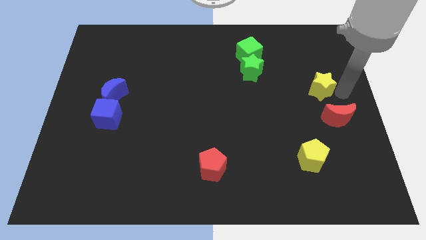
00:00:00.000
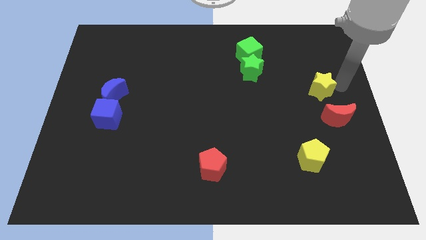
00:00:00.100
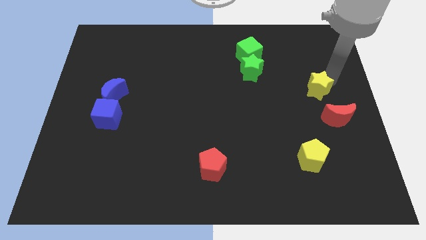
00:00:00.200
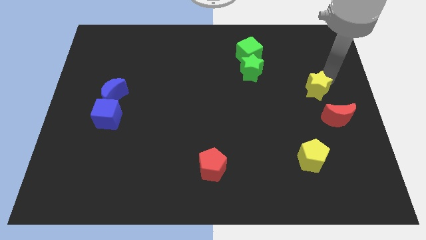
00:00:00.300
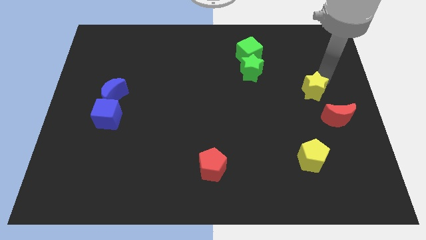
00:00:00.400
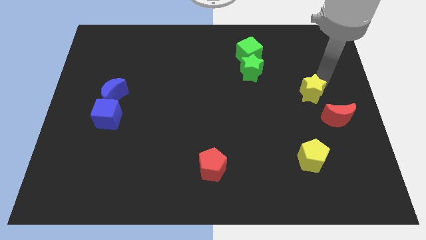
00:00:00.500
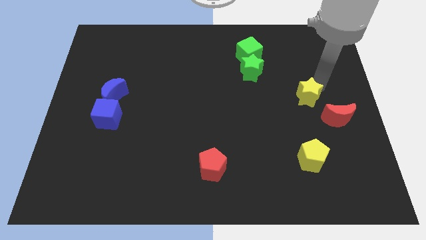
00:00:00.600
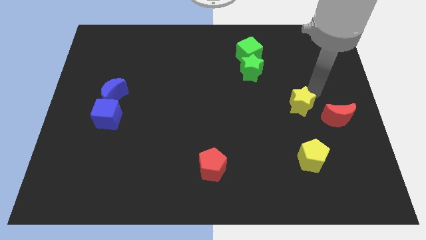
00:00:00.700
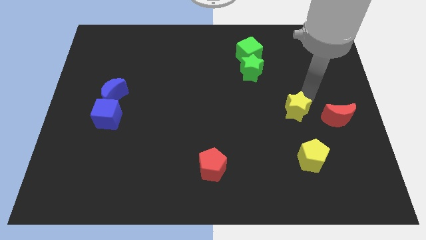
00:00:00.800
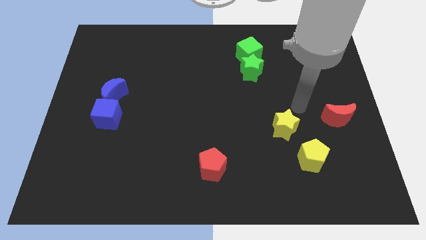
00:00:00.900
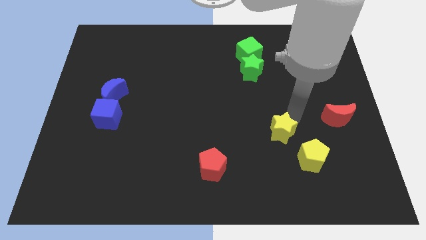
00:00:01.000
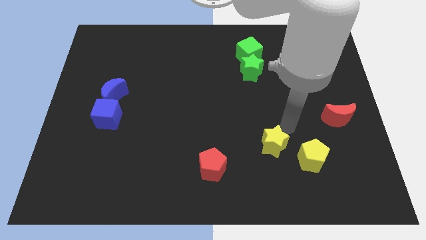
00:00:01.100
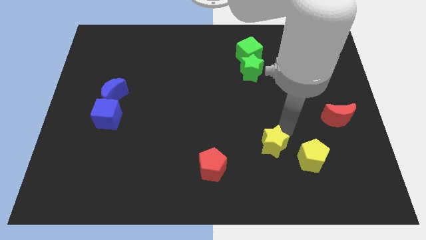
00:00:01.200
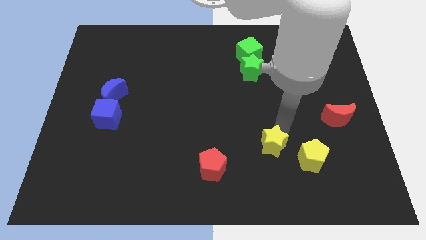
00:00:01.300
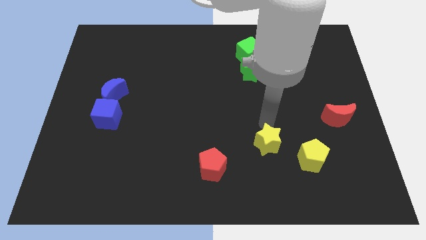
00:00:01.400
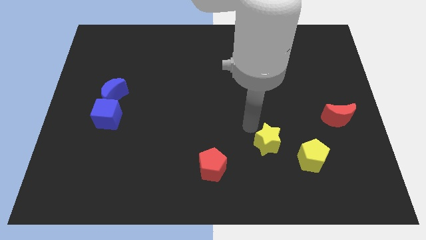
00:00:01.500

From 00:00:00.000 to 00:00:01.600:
drag the yellow star to the top left side of the yellow pentagon

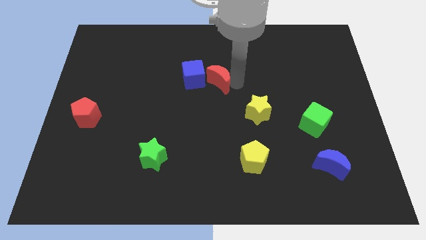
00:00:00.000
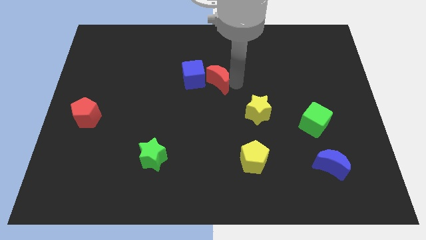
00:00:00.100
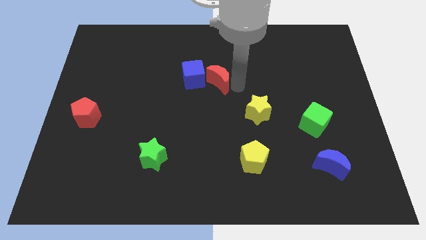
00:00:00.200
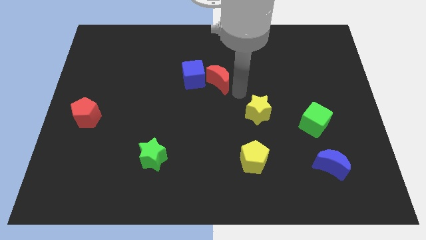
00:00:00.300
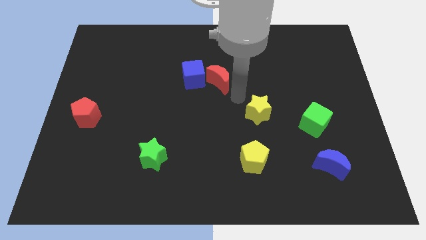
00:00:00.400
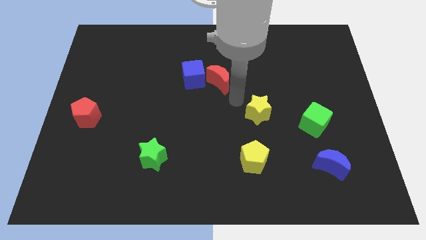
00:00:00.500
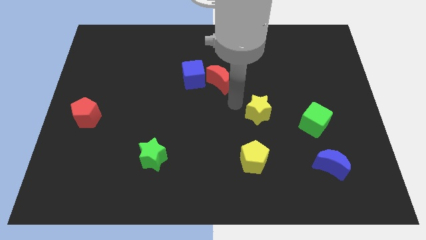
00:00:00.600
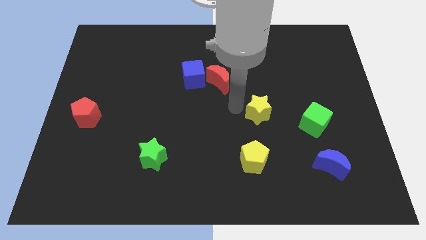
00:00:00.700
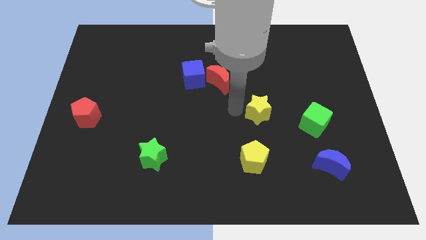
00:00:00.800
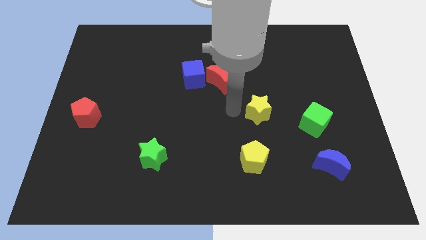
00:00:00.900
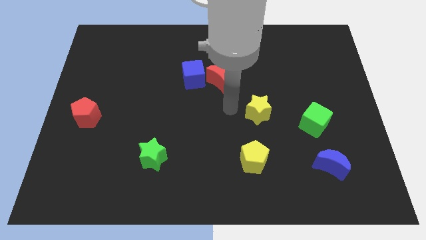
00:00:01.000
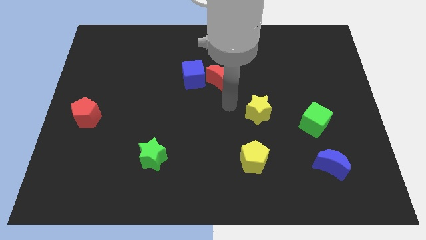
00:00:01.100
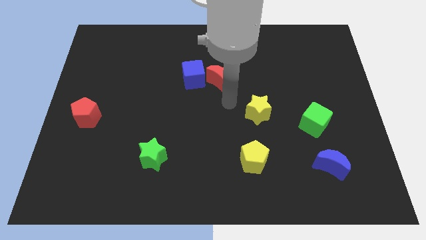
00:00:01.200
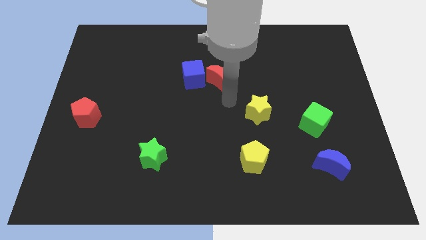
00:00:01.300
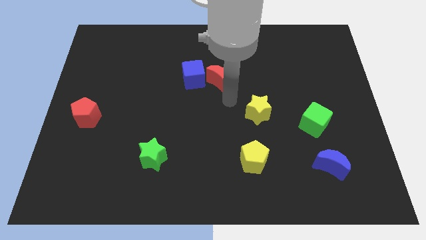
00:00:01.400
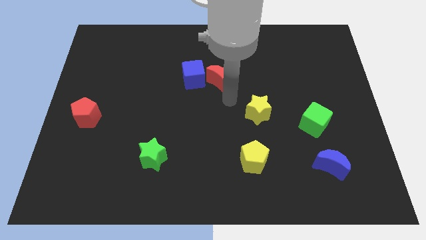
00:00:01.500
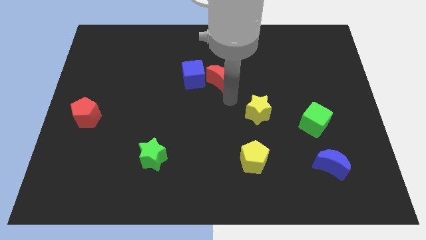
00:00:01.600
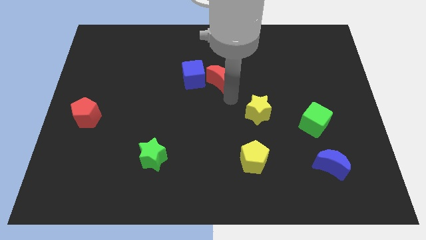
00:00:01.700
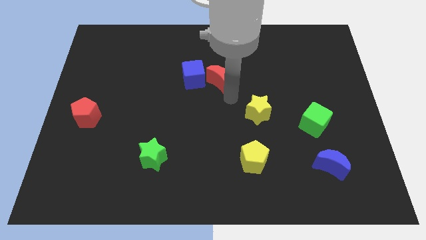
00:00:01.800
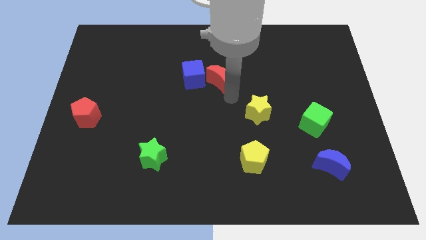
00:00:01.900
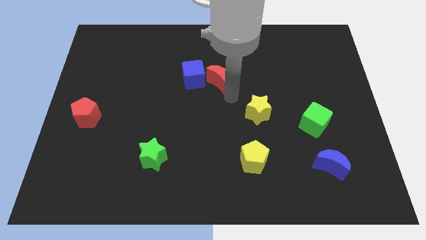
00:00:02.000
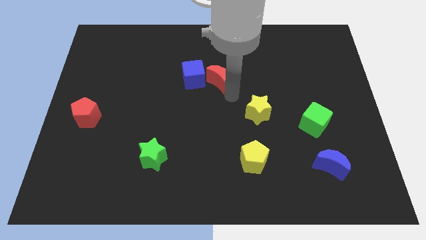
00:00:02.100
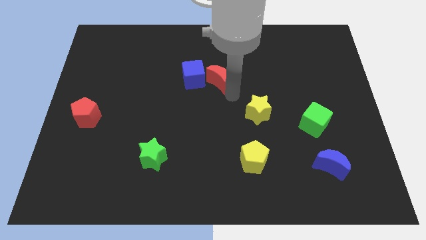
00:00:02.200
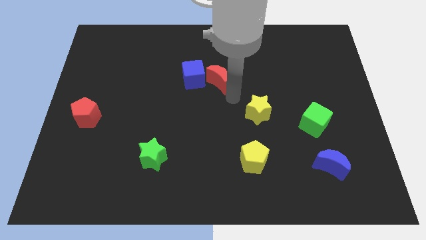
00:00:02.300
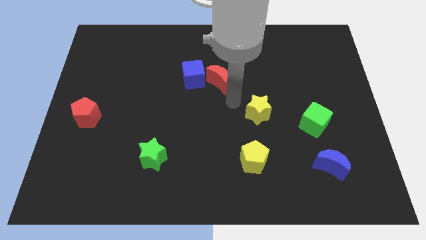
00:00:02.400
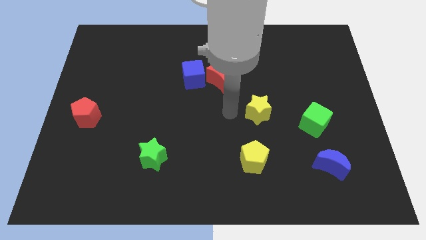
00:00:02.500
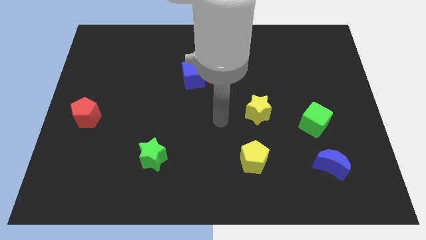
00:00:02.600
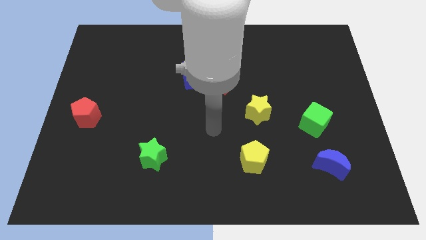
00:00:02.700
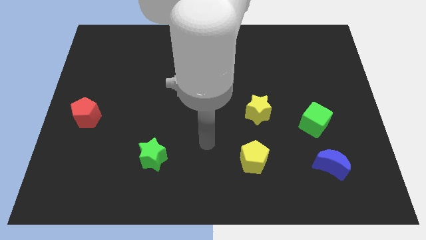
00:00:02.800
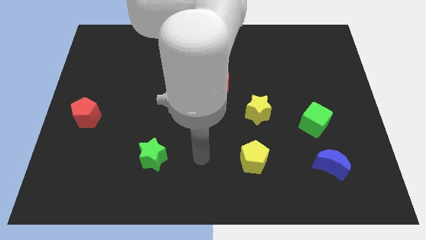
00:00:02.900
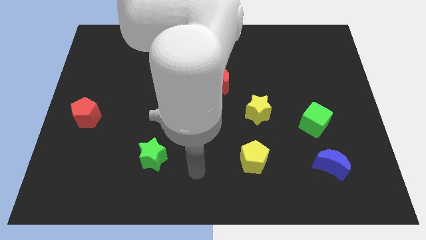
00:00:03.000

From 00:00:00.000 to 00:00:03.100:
move the arm towards the bottom centre of the board

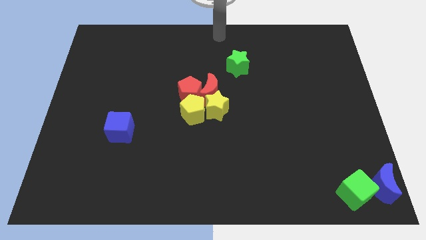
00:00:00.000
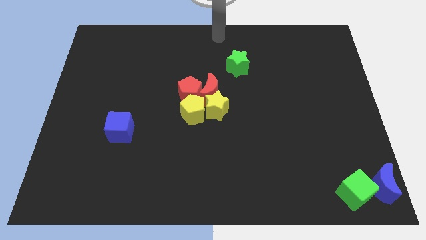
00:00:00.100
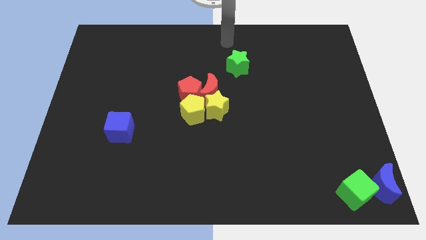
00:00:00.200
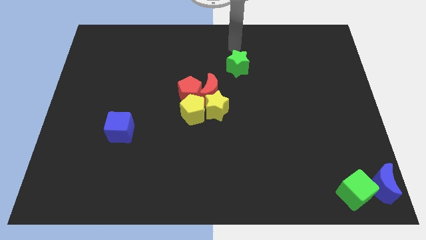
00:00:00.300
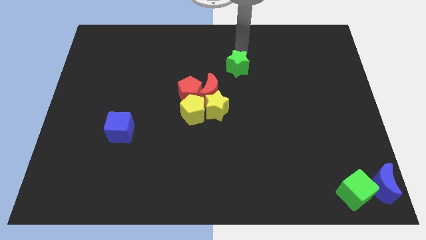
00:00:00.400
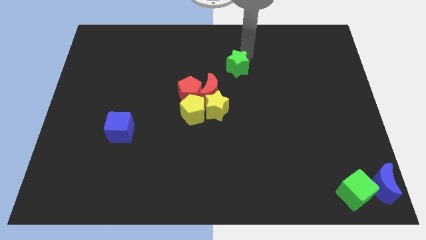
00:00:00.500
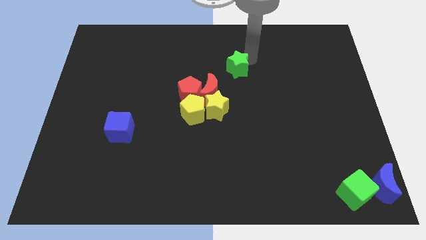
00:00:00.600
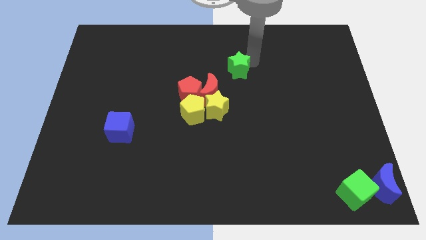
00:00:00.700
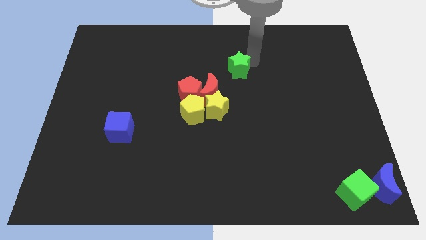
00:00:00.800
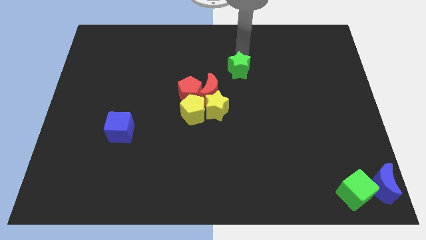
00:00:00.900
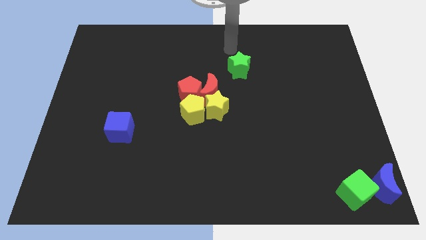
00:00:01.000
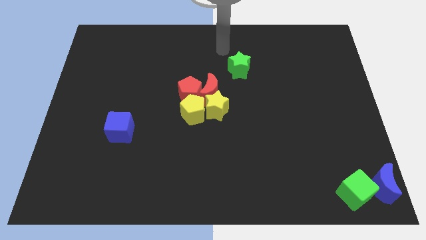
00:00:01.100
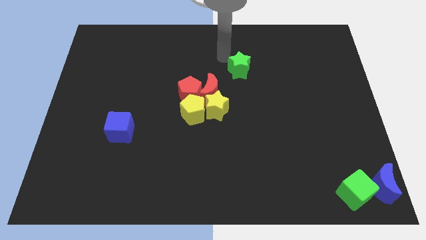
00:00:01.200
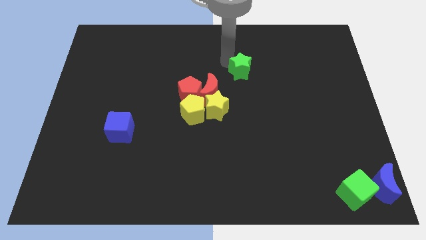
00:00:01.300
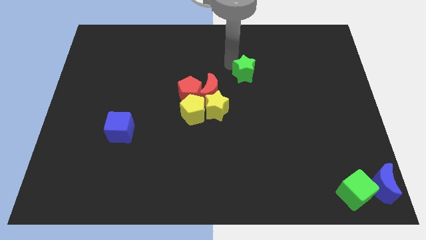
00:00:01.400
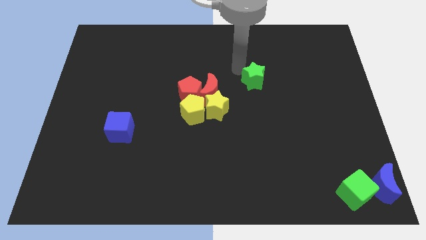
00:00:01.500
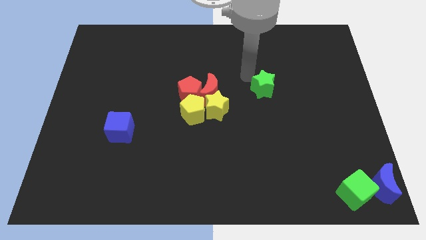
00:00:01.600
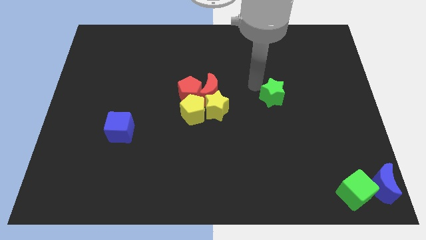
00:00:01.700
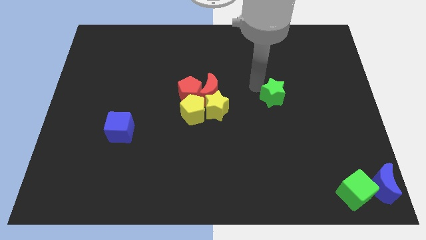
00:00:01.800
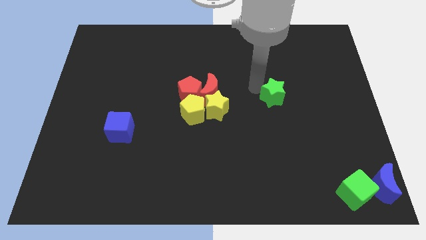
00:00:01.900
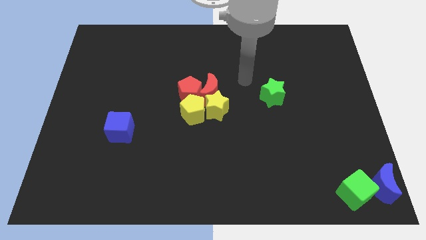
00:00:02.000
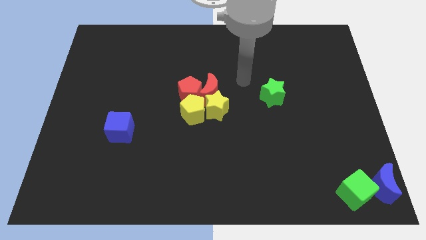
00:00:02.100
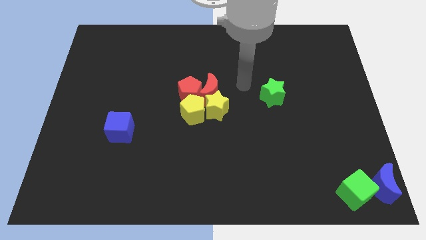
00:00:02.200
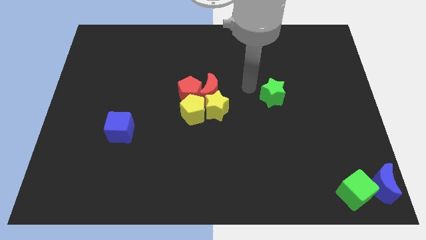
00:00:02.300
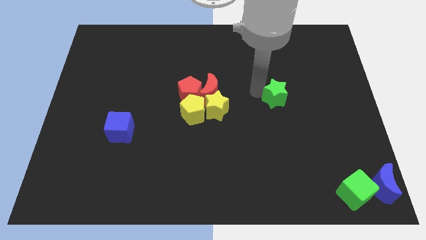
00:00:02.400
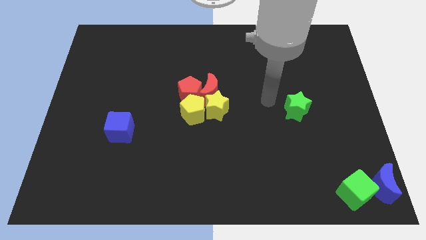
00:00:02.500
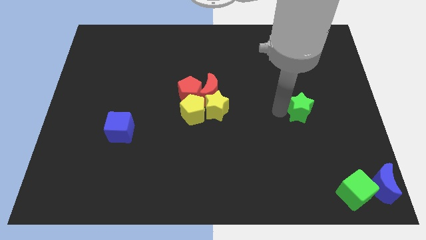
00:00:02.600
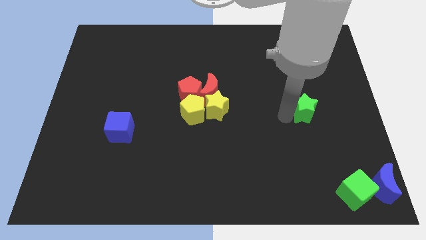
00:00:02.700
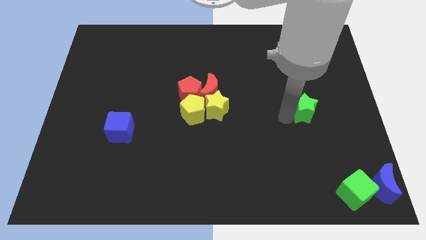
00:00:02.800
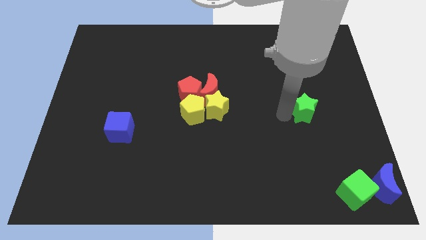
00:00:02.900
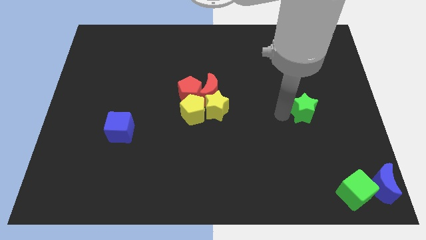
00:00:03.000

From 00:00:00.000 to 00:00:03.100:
move green star towards the blue crescent

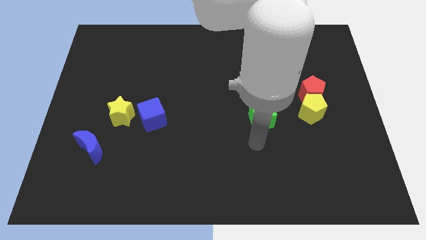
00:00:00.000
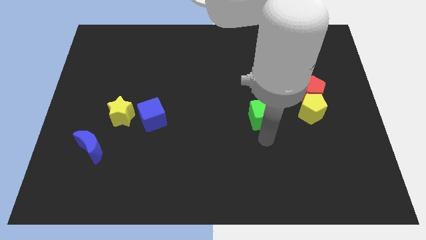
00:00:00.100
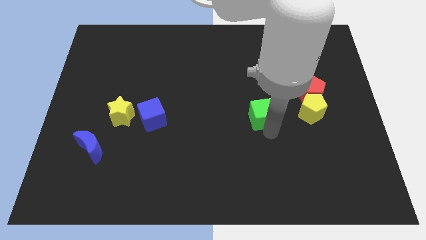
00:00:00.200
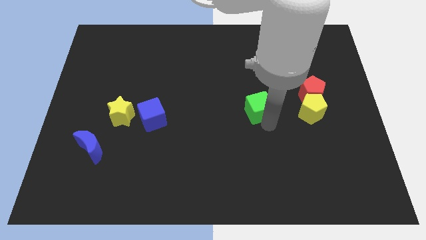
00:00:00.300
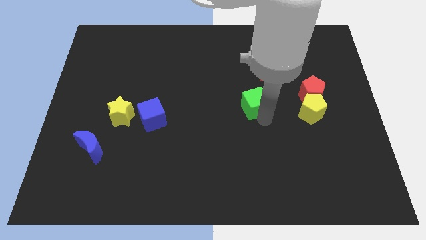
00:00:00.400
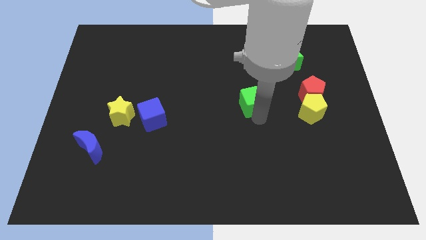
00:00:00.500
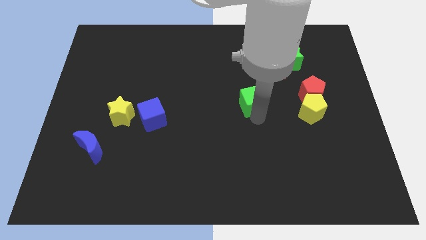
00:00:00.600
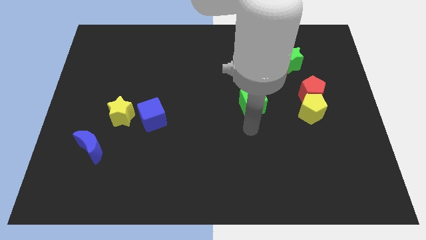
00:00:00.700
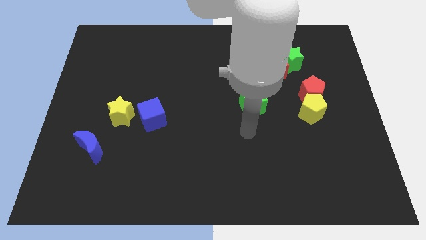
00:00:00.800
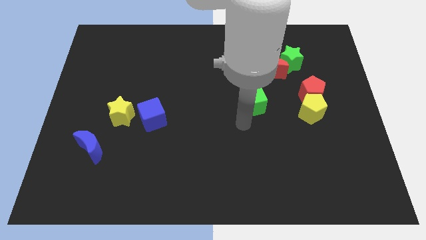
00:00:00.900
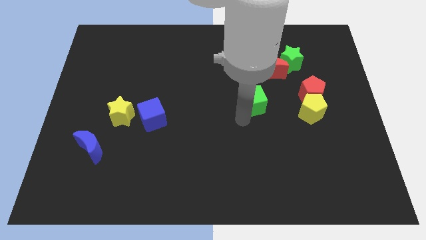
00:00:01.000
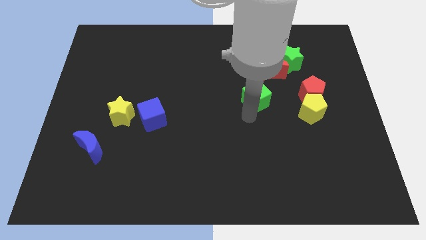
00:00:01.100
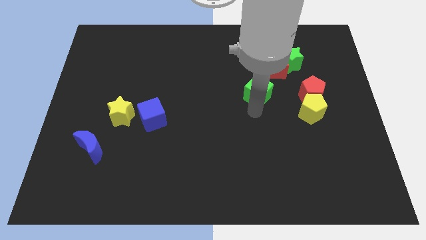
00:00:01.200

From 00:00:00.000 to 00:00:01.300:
move the green cube upwards

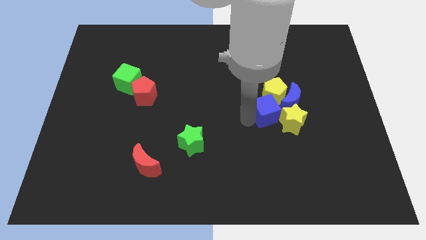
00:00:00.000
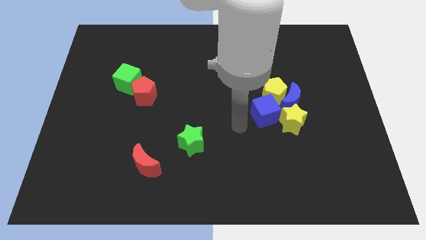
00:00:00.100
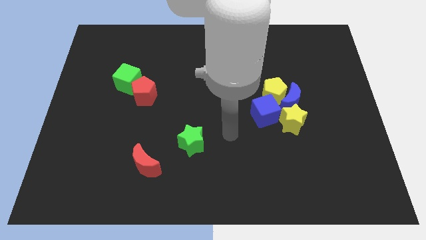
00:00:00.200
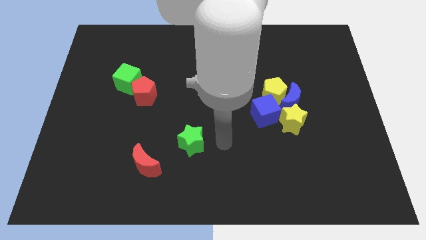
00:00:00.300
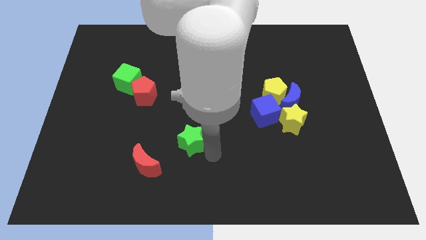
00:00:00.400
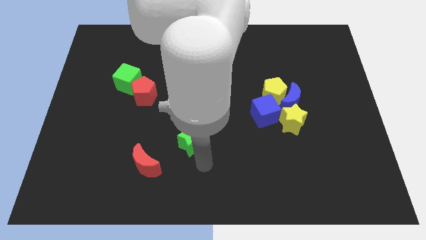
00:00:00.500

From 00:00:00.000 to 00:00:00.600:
put your arm at the bottom of green star
